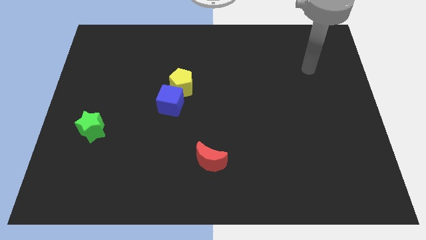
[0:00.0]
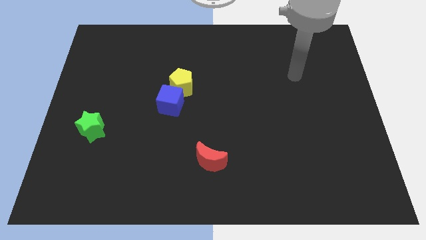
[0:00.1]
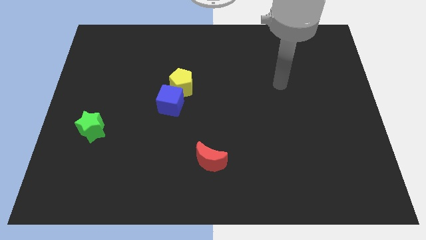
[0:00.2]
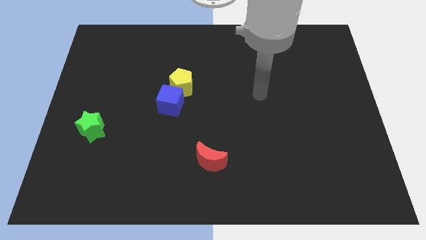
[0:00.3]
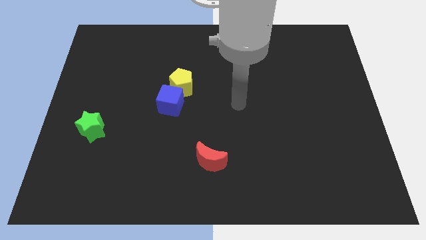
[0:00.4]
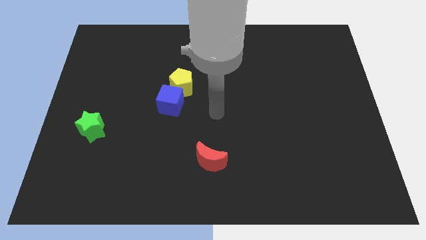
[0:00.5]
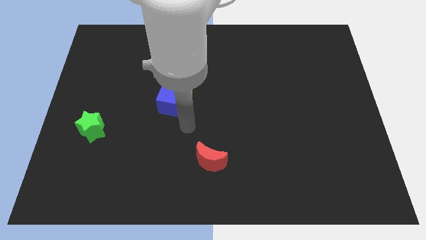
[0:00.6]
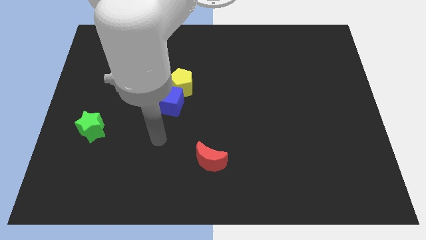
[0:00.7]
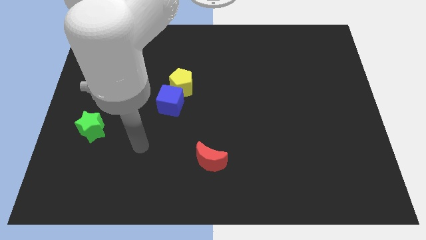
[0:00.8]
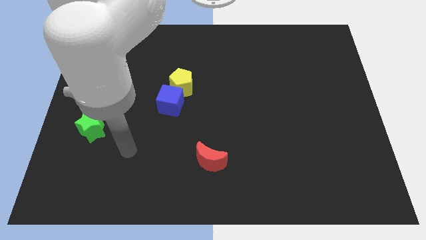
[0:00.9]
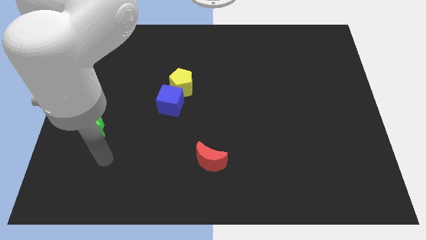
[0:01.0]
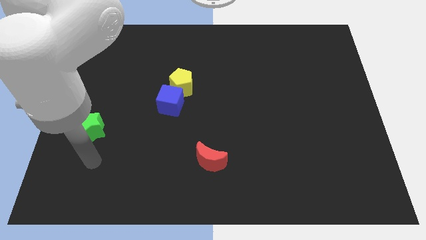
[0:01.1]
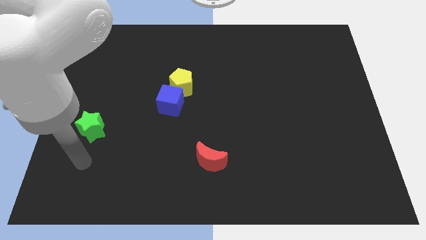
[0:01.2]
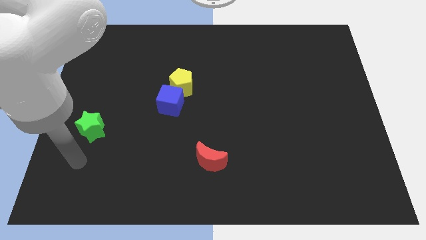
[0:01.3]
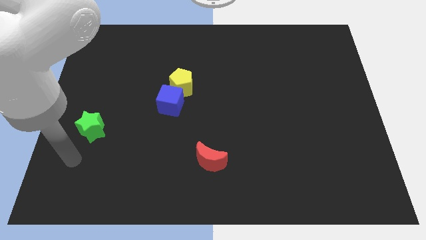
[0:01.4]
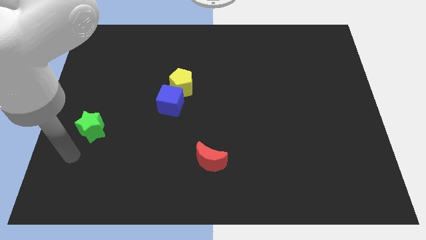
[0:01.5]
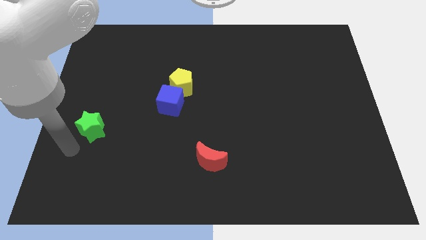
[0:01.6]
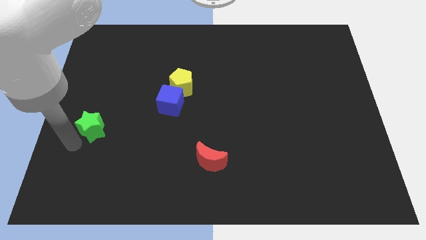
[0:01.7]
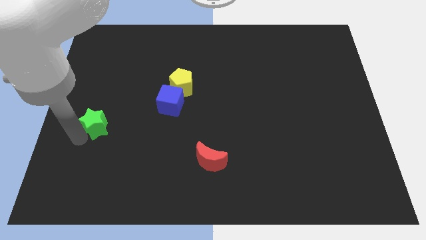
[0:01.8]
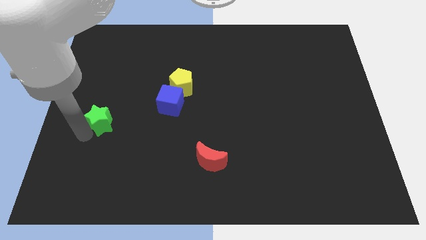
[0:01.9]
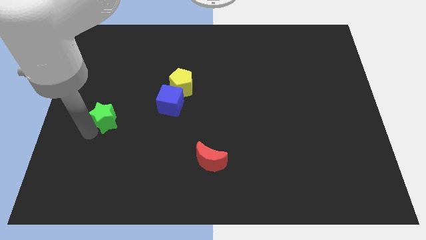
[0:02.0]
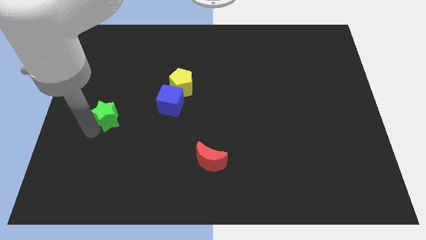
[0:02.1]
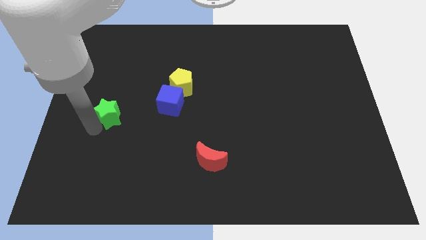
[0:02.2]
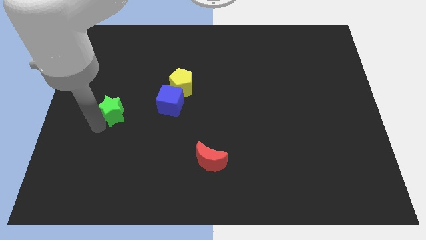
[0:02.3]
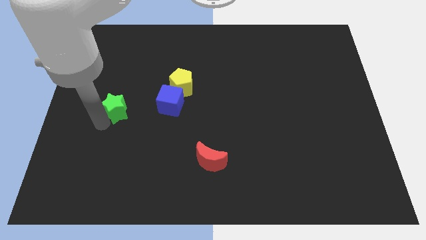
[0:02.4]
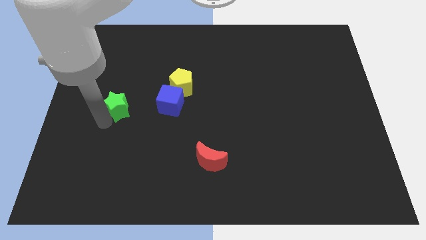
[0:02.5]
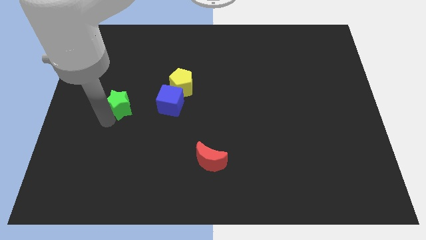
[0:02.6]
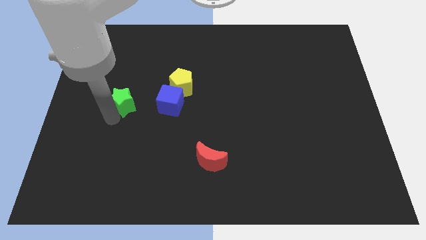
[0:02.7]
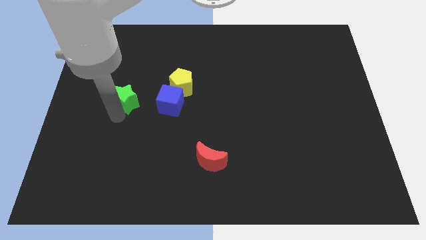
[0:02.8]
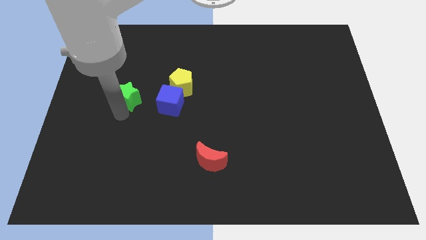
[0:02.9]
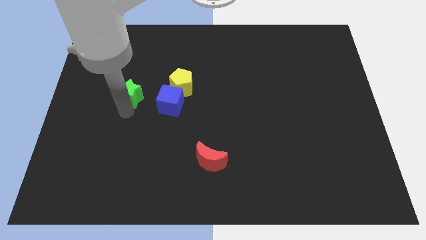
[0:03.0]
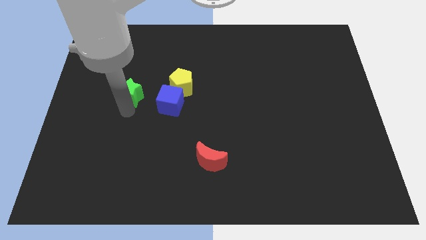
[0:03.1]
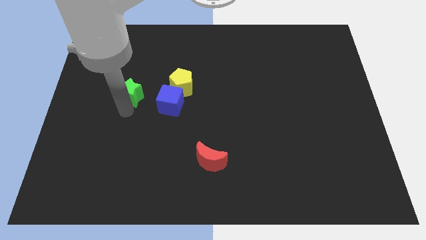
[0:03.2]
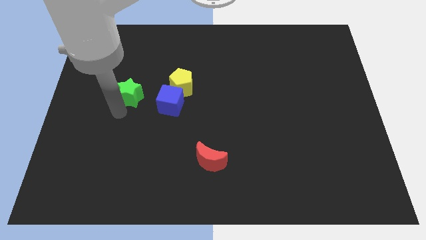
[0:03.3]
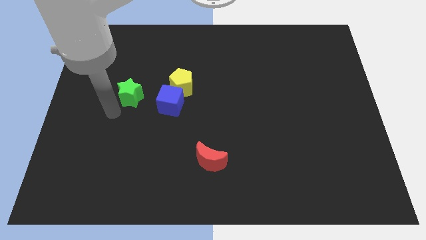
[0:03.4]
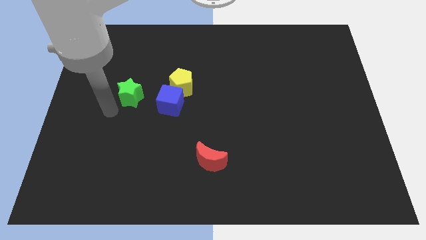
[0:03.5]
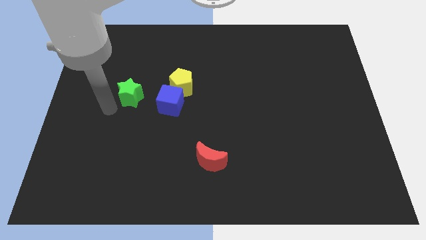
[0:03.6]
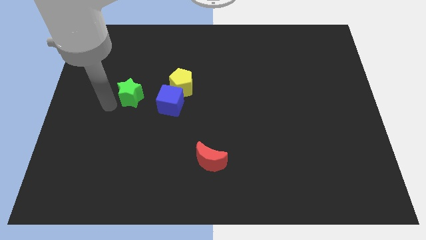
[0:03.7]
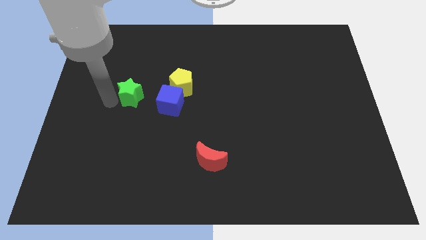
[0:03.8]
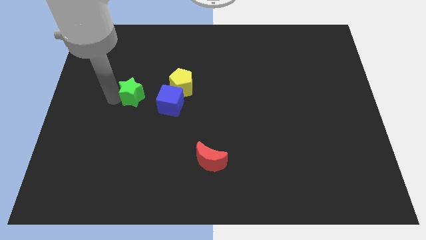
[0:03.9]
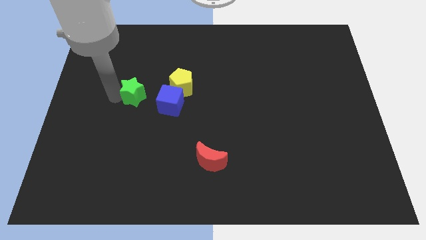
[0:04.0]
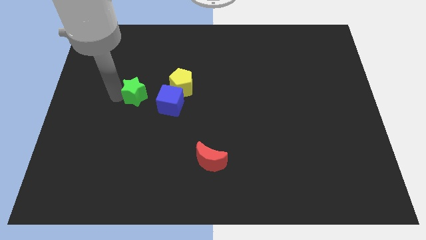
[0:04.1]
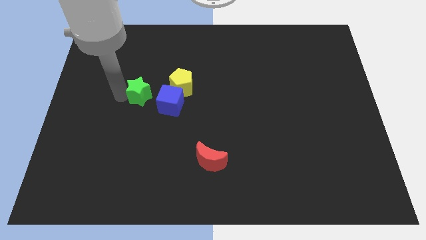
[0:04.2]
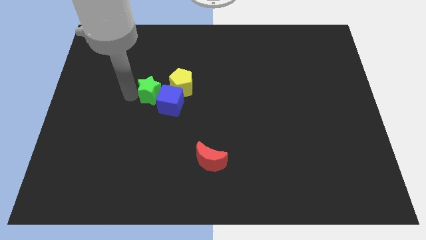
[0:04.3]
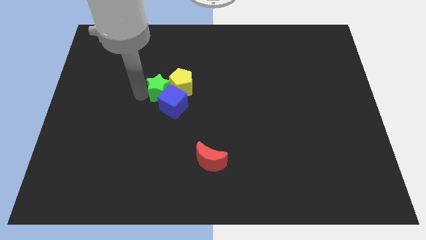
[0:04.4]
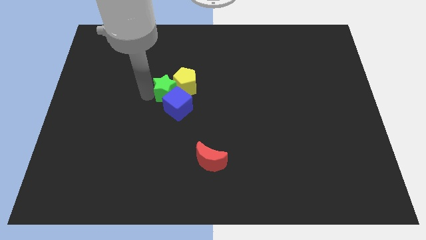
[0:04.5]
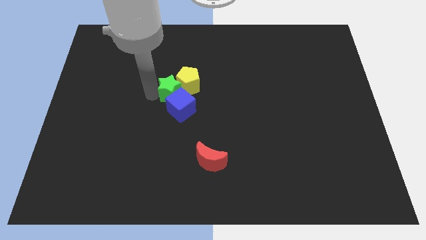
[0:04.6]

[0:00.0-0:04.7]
slide the green block towards the pentagon

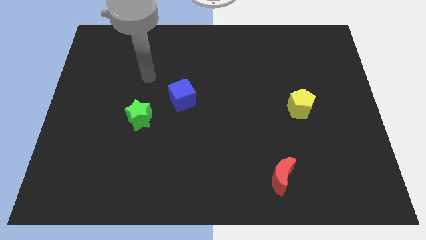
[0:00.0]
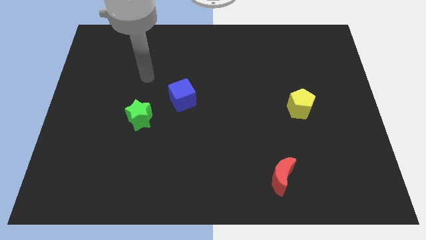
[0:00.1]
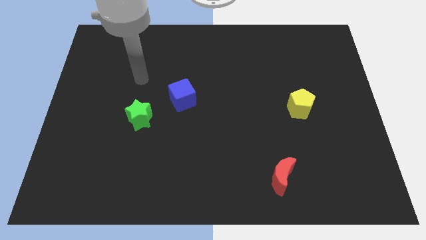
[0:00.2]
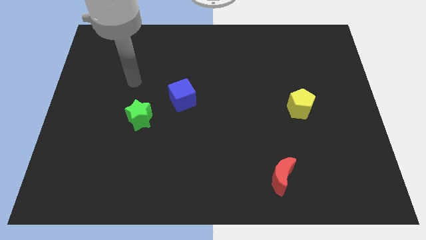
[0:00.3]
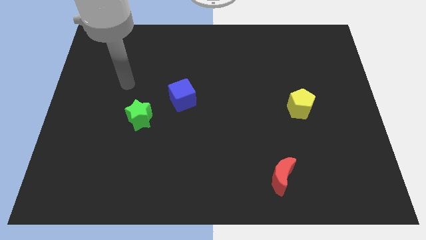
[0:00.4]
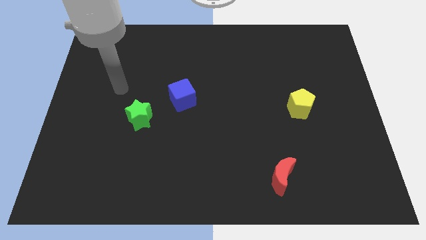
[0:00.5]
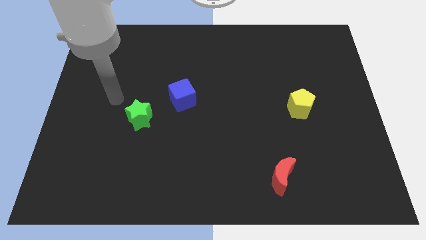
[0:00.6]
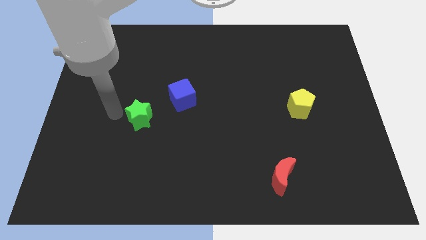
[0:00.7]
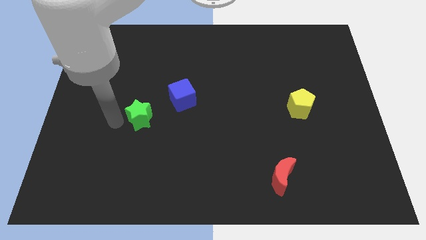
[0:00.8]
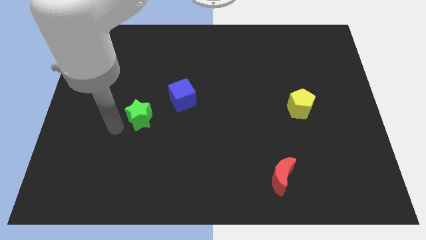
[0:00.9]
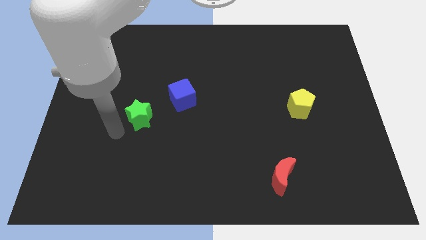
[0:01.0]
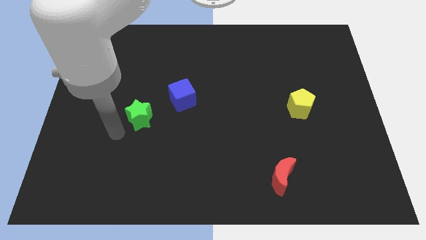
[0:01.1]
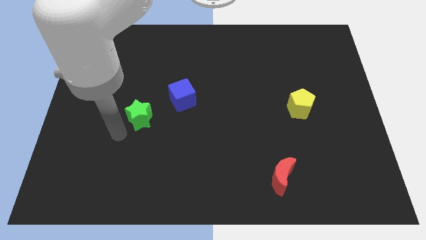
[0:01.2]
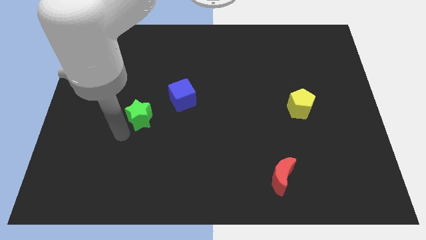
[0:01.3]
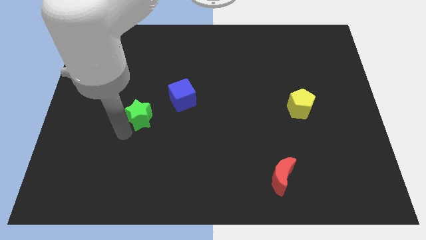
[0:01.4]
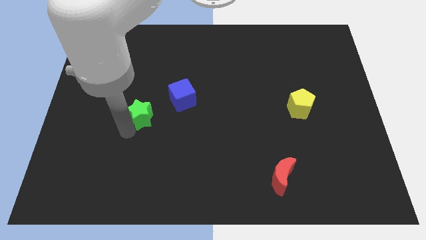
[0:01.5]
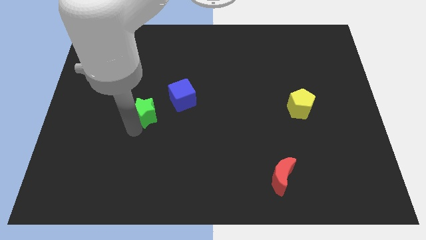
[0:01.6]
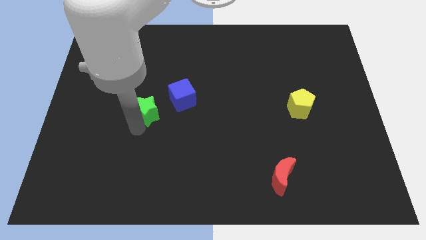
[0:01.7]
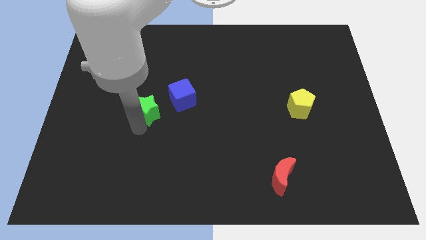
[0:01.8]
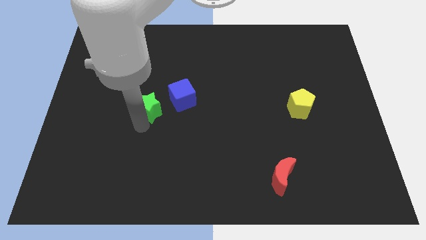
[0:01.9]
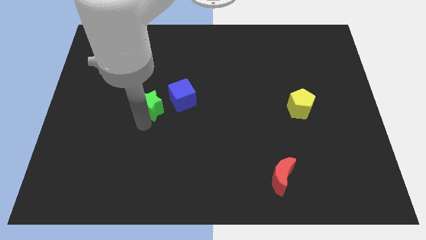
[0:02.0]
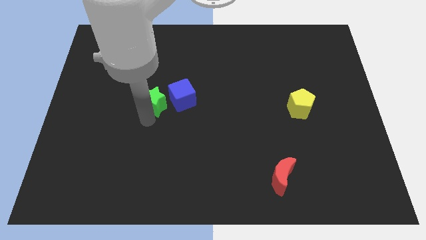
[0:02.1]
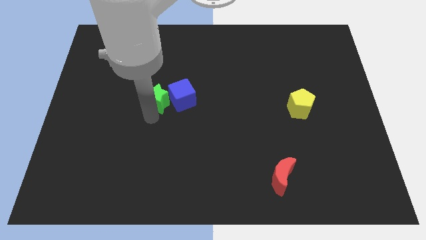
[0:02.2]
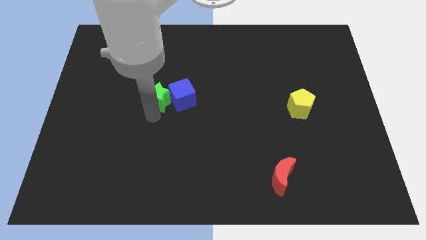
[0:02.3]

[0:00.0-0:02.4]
slide the star next to the cube

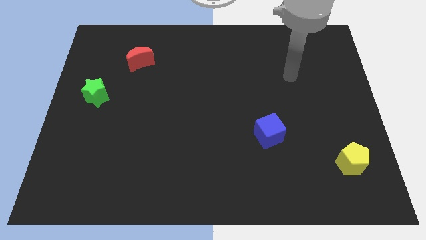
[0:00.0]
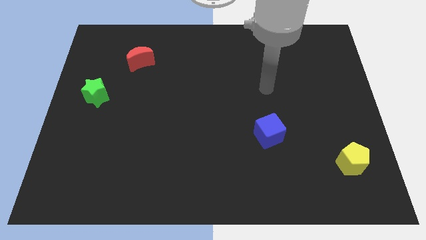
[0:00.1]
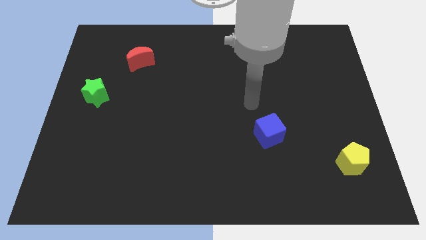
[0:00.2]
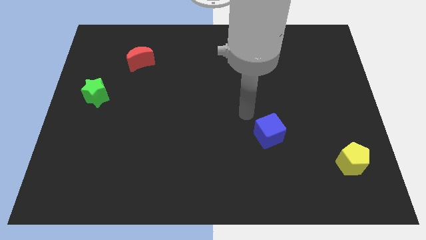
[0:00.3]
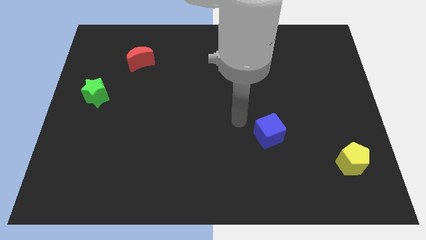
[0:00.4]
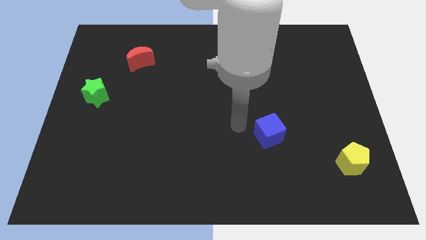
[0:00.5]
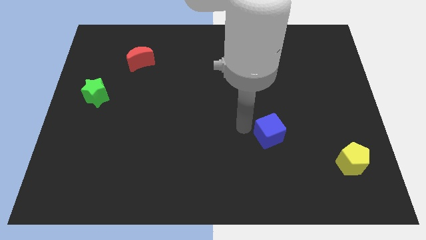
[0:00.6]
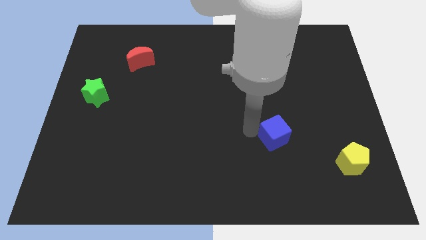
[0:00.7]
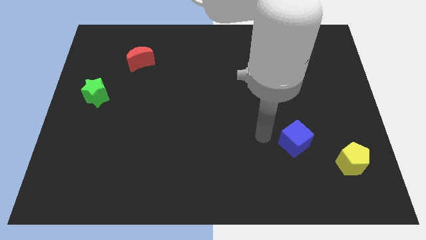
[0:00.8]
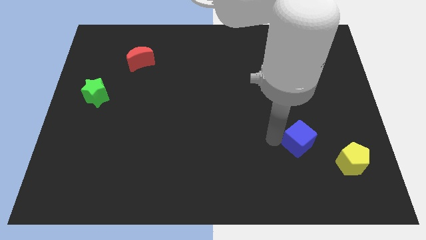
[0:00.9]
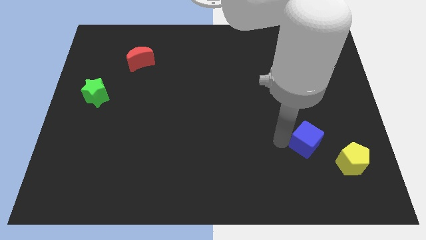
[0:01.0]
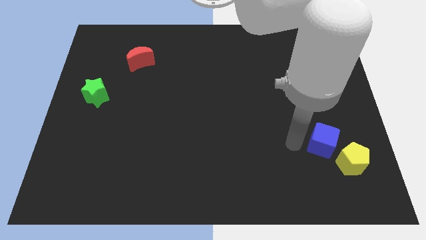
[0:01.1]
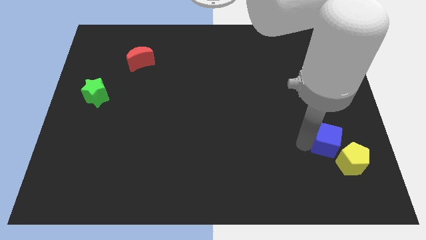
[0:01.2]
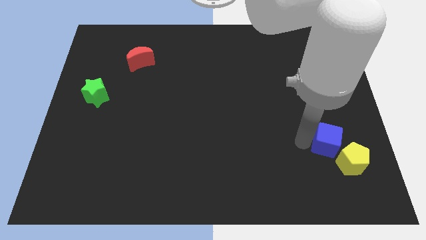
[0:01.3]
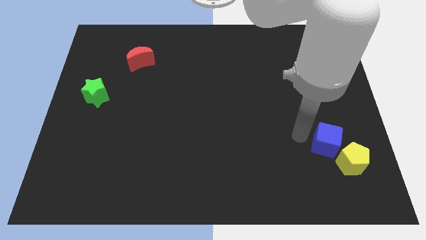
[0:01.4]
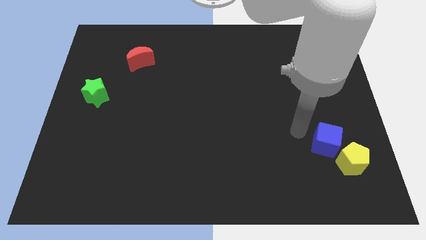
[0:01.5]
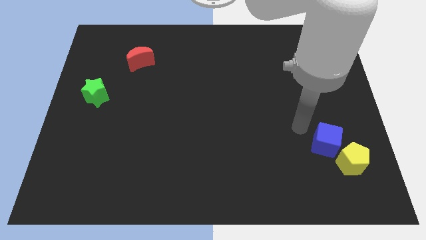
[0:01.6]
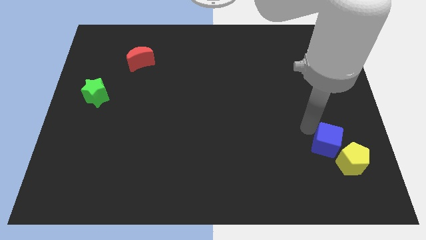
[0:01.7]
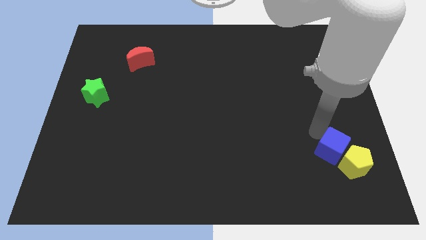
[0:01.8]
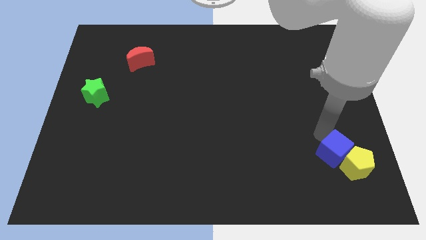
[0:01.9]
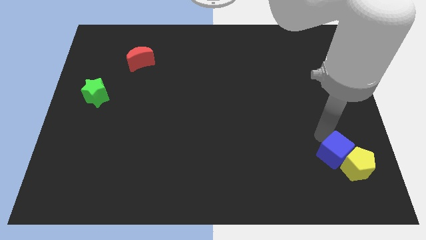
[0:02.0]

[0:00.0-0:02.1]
push the blue block towards the yellow block
